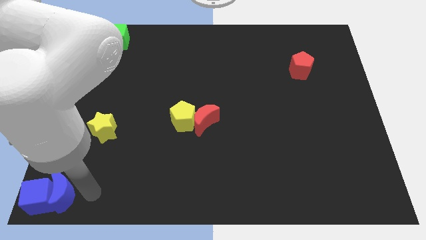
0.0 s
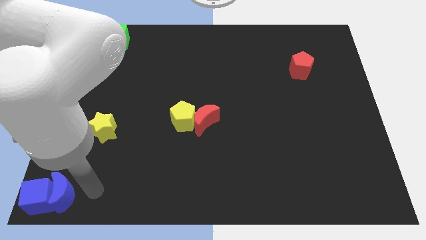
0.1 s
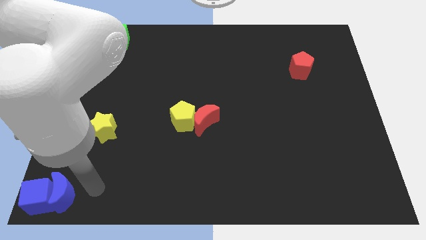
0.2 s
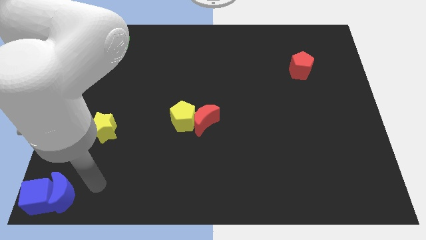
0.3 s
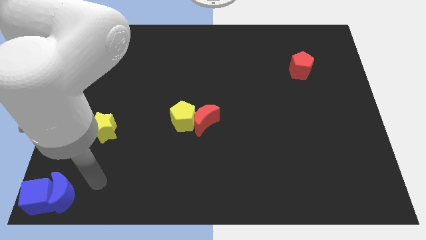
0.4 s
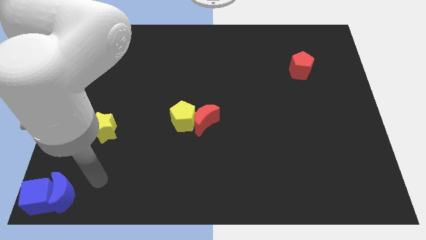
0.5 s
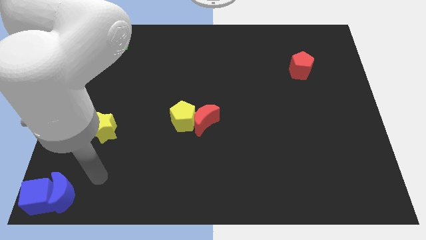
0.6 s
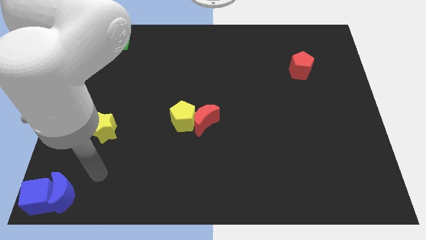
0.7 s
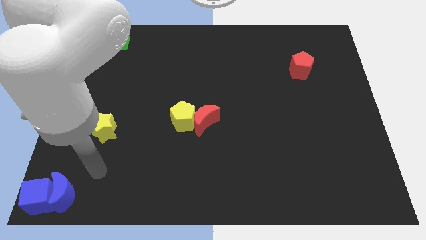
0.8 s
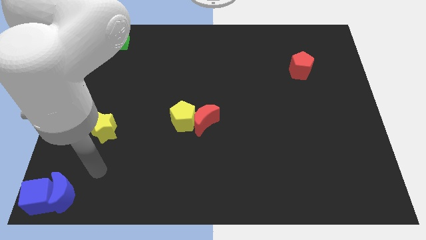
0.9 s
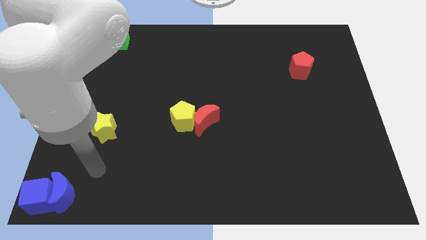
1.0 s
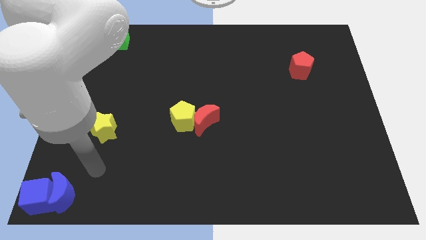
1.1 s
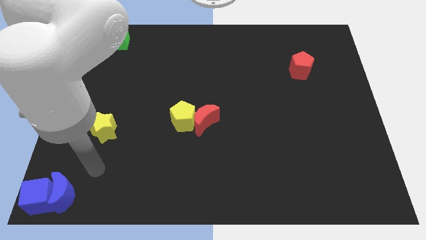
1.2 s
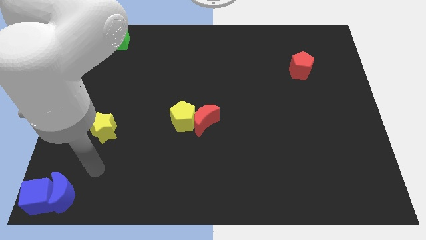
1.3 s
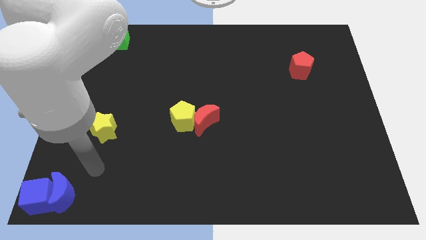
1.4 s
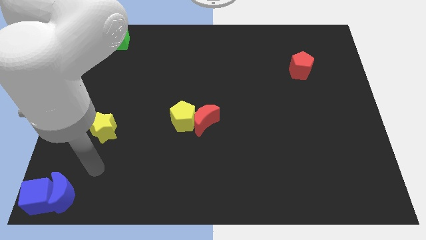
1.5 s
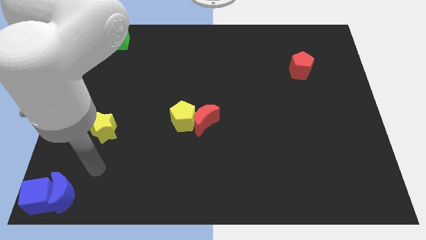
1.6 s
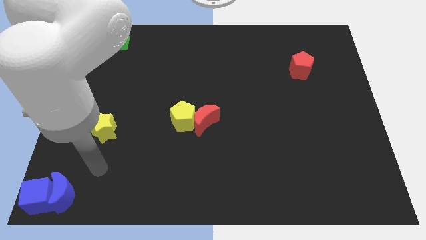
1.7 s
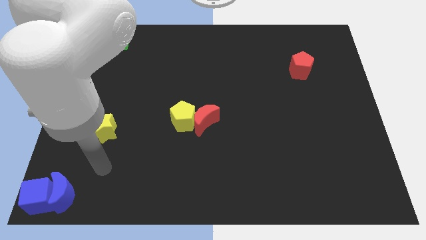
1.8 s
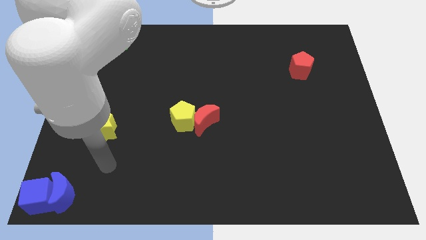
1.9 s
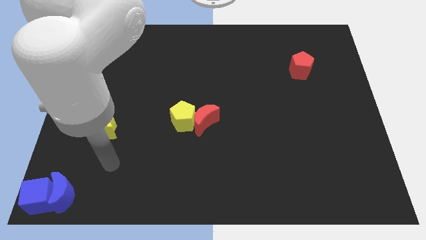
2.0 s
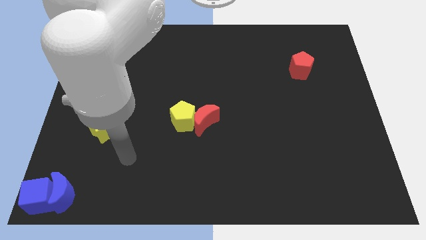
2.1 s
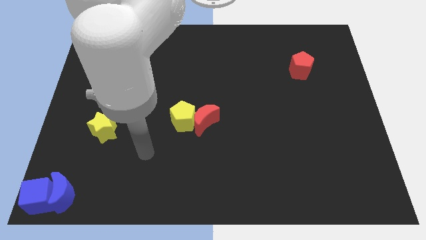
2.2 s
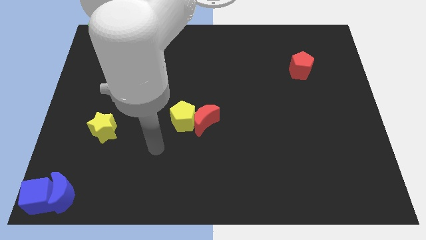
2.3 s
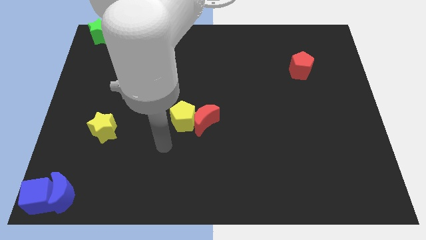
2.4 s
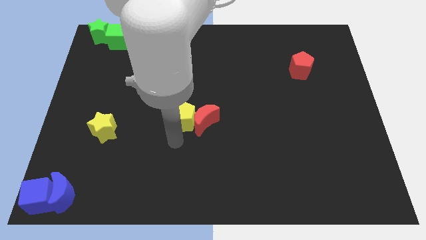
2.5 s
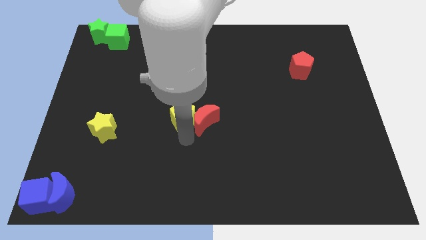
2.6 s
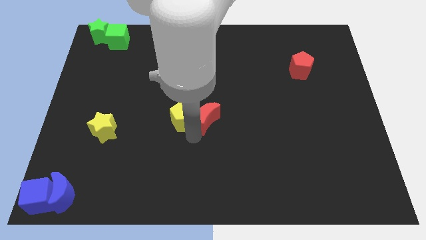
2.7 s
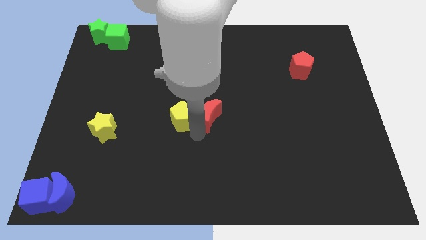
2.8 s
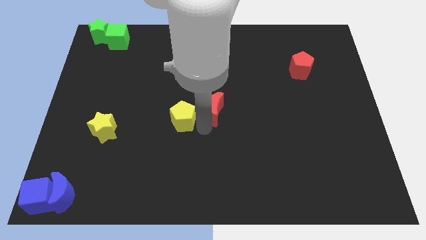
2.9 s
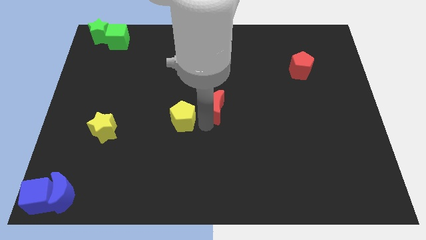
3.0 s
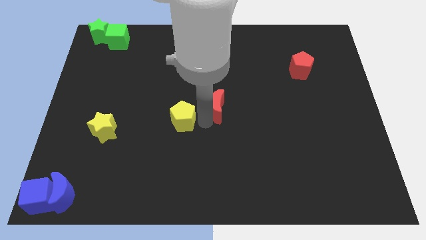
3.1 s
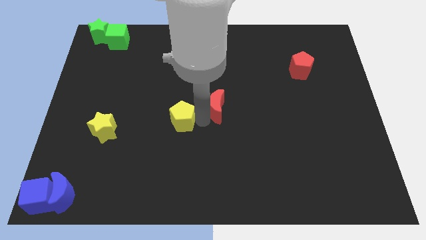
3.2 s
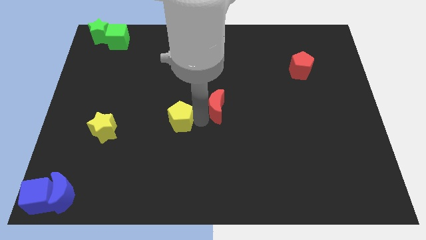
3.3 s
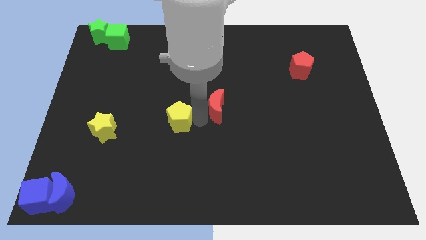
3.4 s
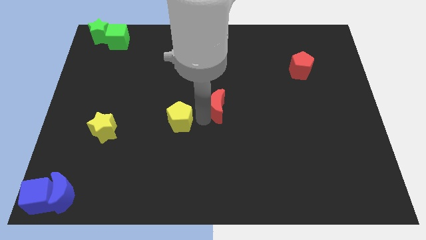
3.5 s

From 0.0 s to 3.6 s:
place your arm in between red crescent and the yellow pentagon

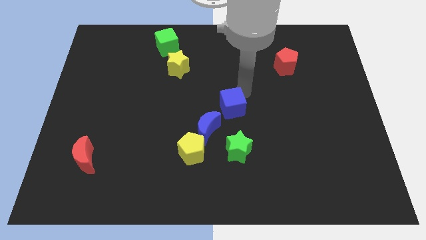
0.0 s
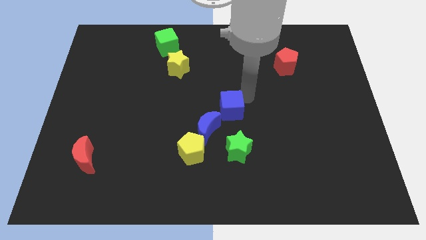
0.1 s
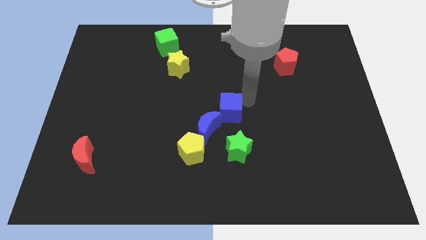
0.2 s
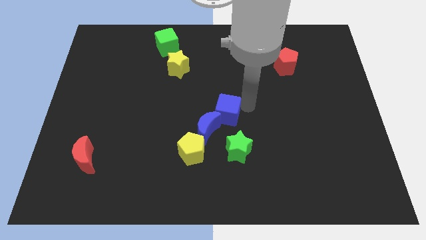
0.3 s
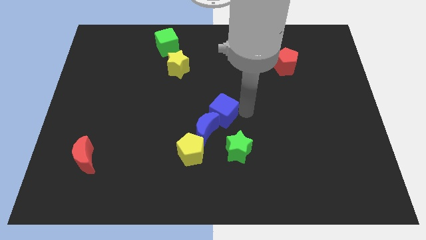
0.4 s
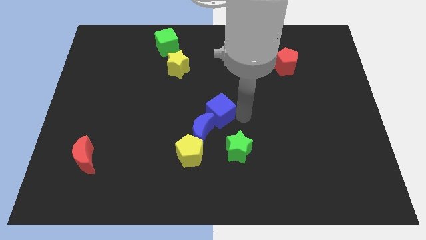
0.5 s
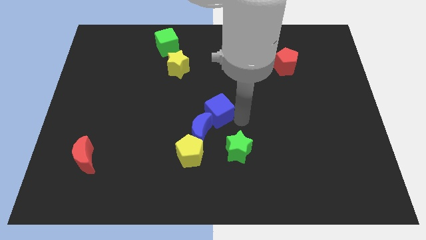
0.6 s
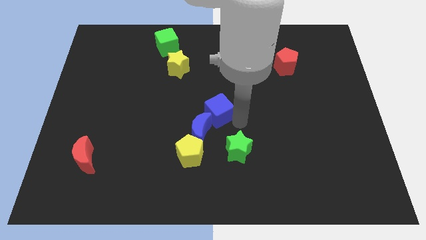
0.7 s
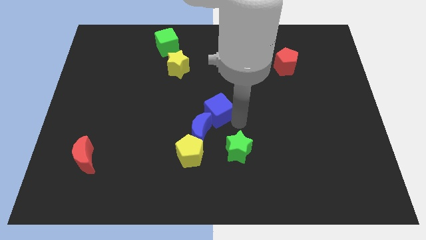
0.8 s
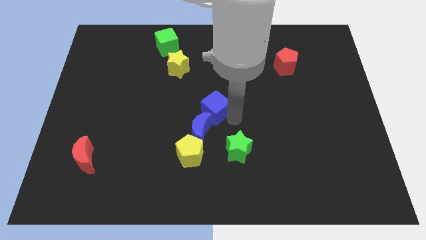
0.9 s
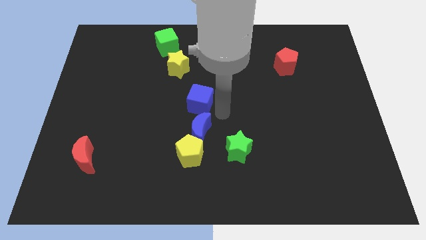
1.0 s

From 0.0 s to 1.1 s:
move the blue cube to the top of the blue crescent

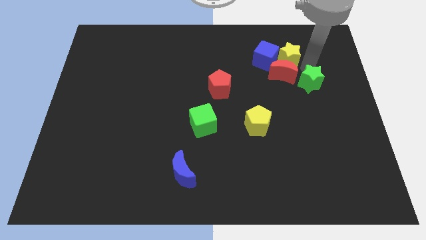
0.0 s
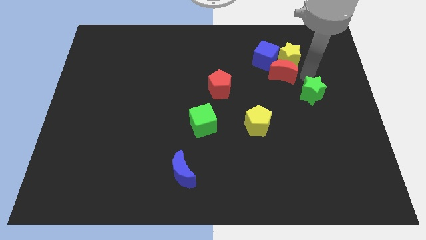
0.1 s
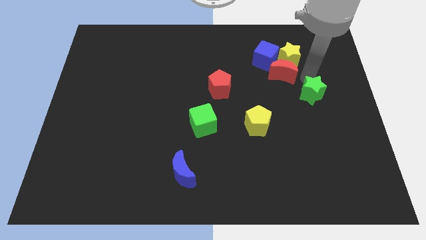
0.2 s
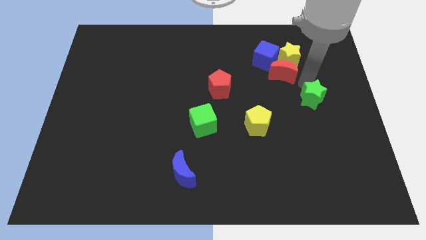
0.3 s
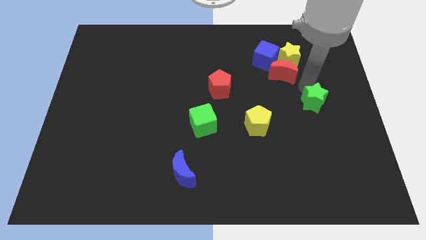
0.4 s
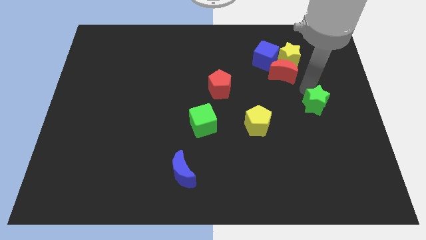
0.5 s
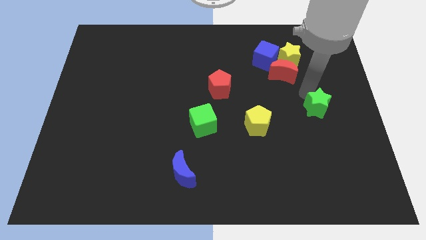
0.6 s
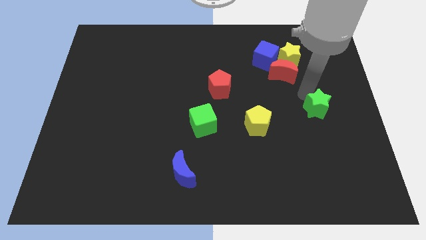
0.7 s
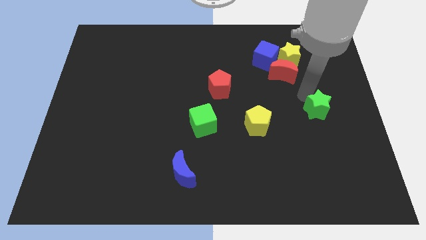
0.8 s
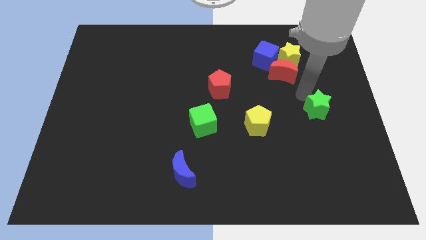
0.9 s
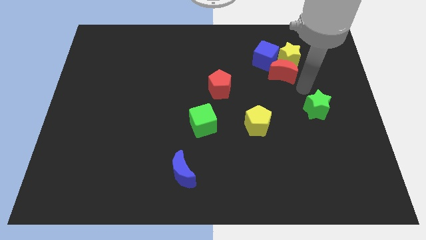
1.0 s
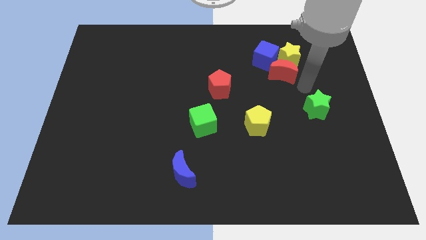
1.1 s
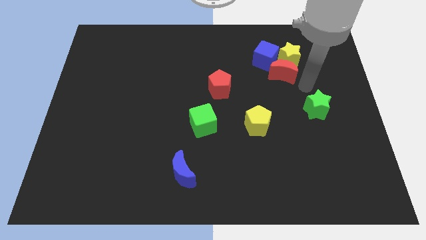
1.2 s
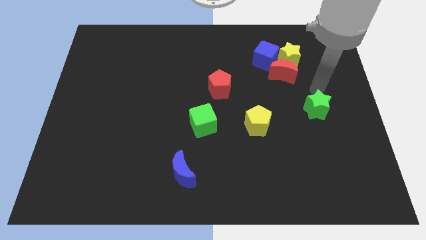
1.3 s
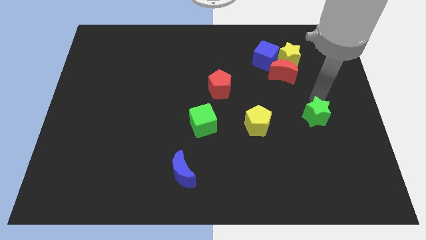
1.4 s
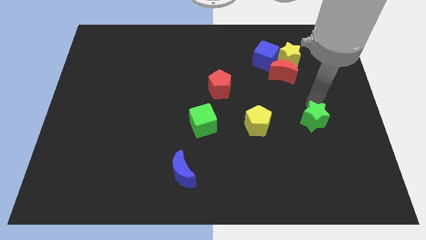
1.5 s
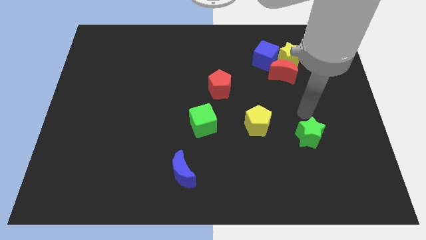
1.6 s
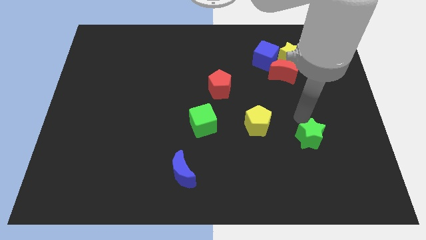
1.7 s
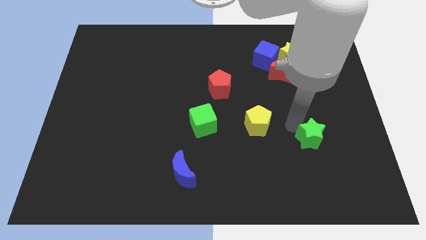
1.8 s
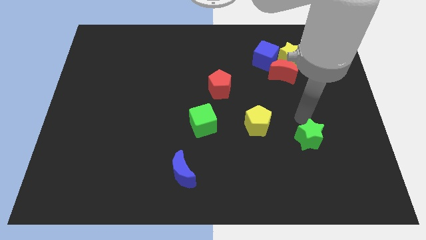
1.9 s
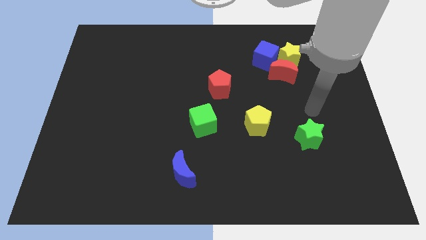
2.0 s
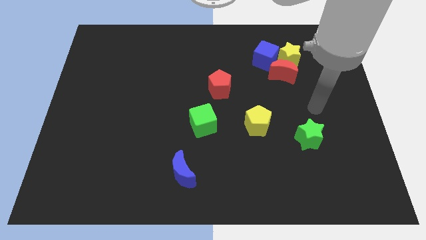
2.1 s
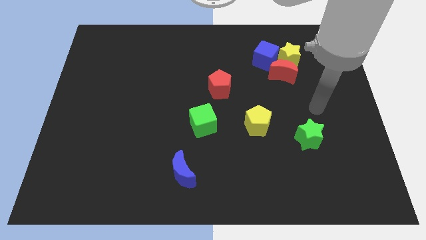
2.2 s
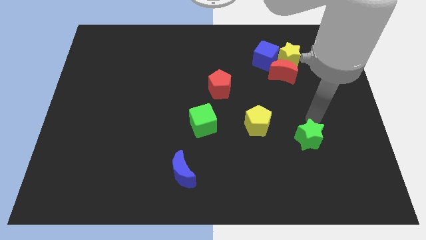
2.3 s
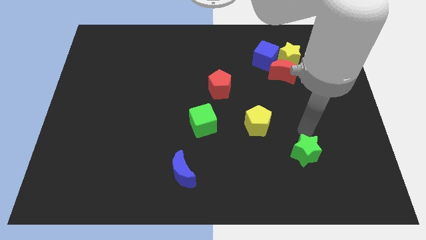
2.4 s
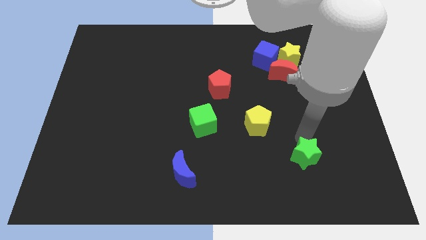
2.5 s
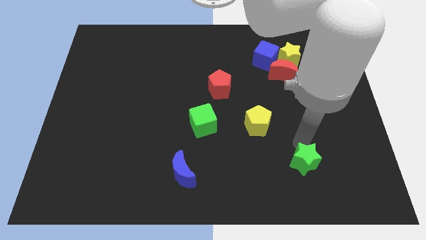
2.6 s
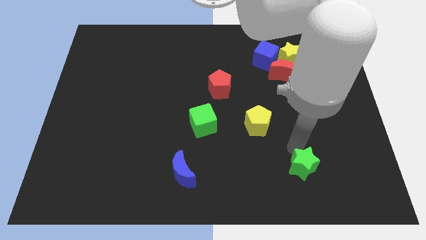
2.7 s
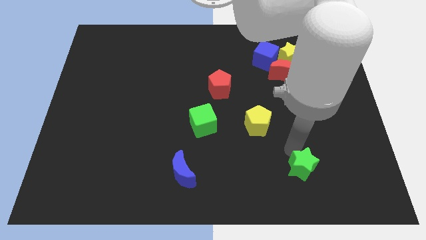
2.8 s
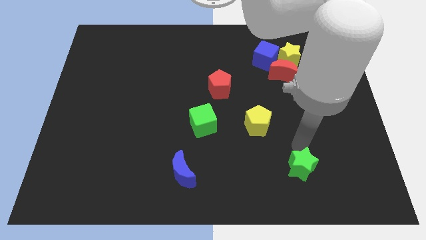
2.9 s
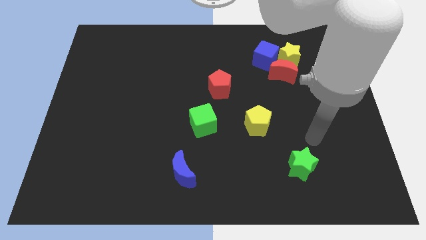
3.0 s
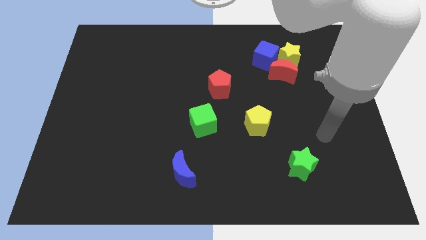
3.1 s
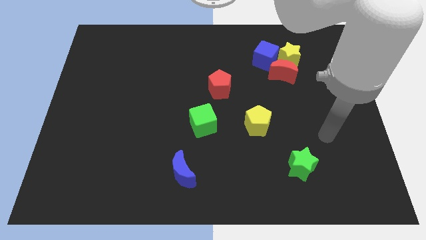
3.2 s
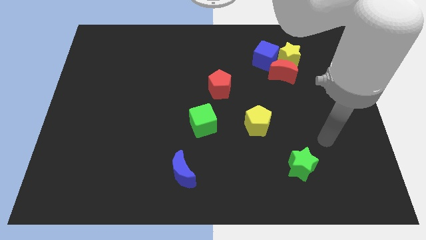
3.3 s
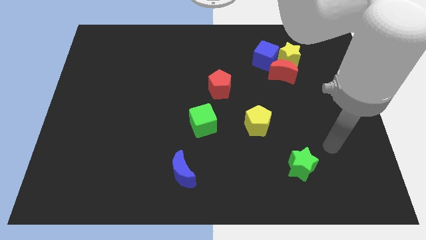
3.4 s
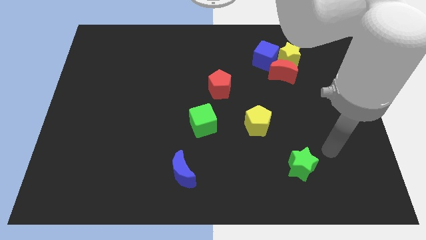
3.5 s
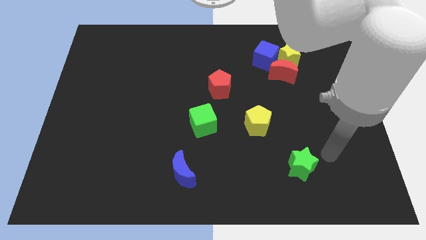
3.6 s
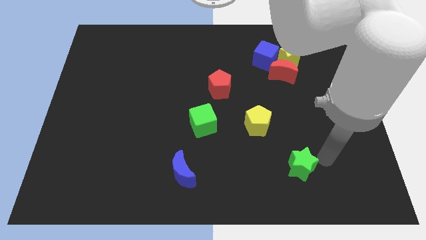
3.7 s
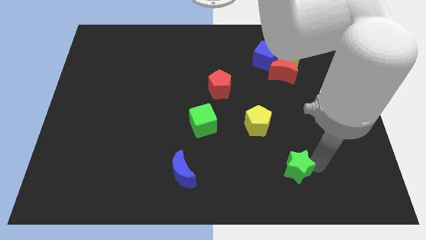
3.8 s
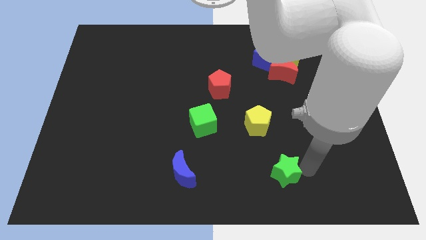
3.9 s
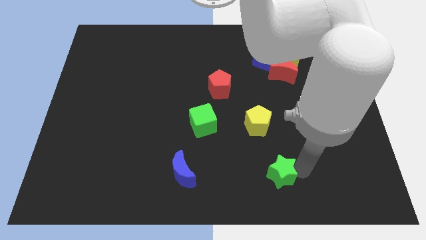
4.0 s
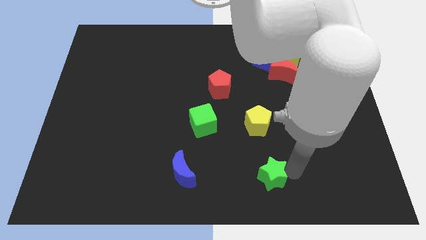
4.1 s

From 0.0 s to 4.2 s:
place the green star at the bottom right of the yellow pentagon
